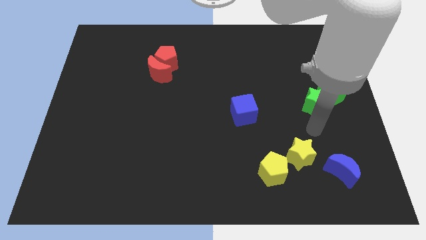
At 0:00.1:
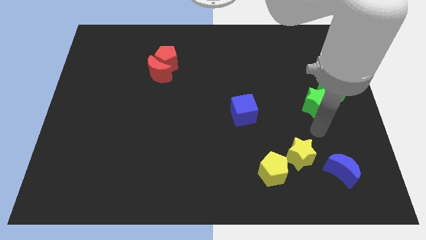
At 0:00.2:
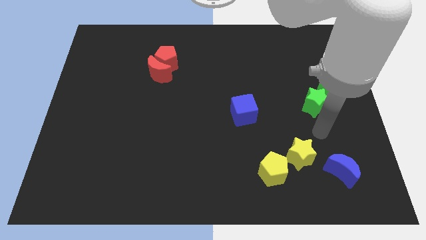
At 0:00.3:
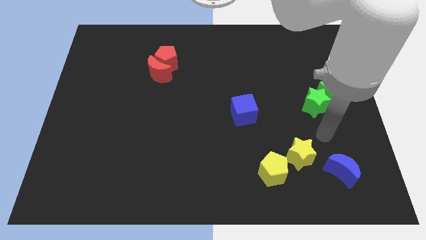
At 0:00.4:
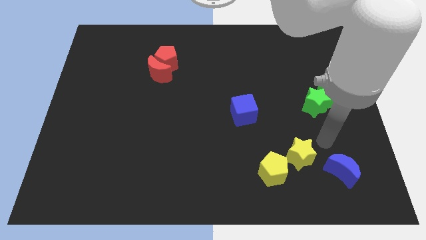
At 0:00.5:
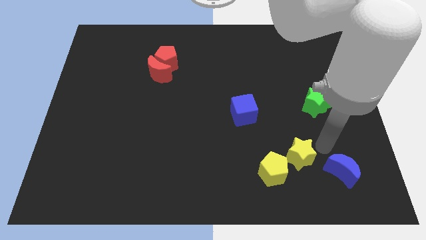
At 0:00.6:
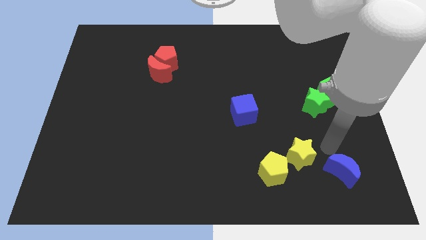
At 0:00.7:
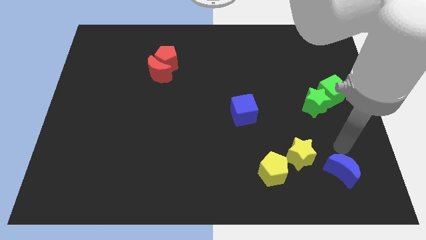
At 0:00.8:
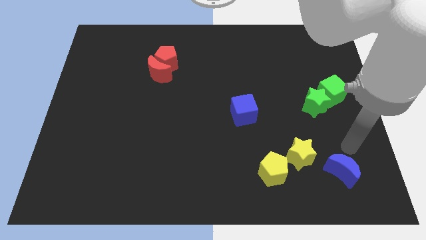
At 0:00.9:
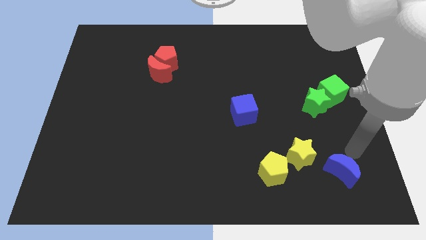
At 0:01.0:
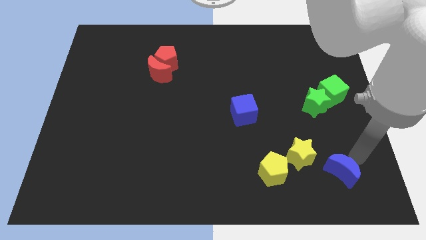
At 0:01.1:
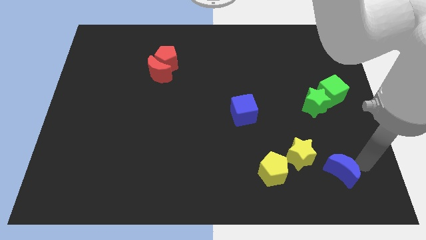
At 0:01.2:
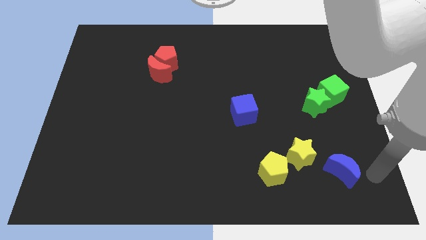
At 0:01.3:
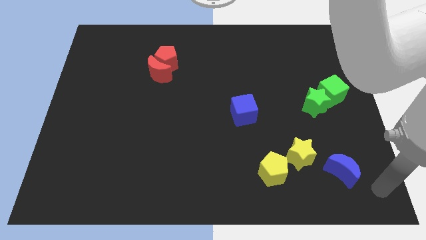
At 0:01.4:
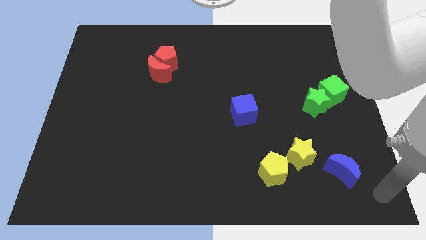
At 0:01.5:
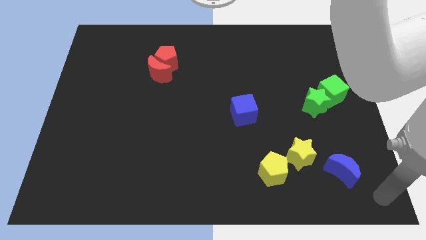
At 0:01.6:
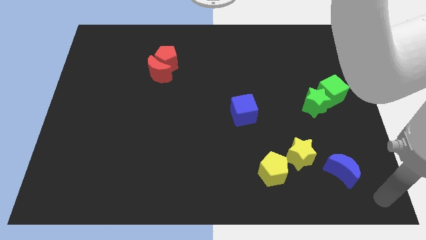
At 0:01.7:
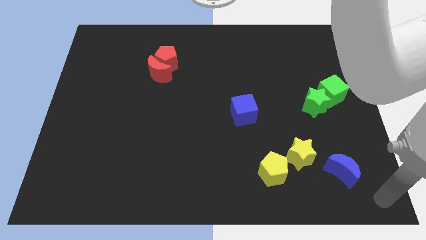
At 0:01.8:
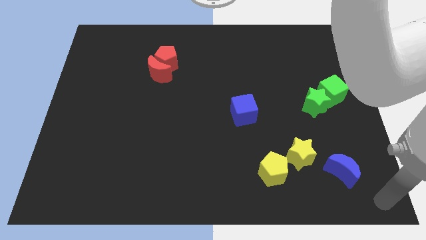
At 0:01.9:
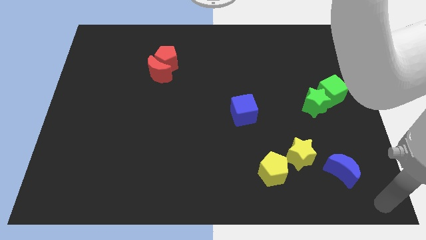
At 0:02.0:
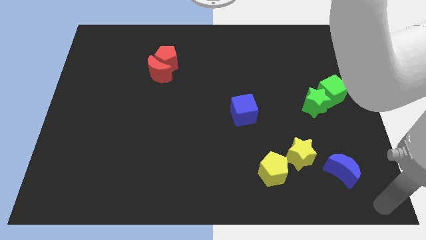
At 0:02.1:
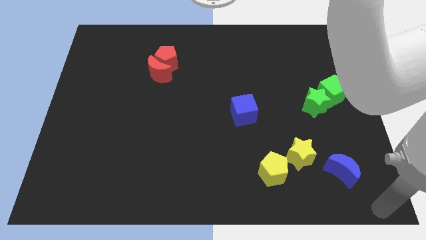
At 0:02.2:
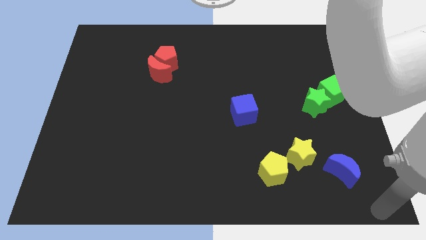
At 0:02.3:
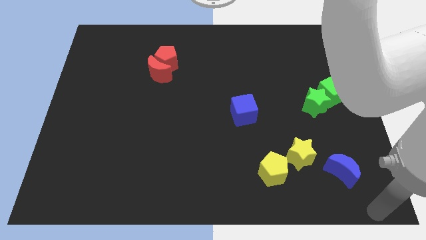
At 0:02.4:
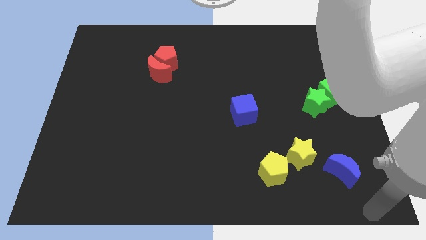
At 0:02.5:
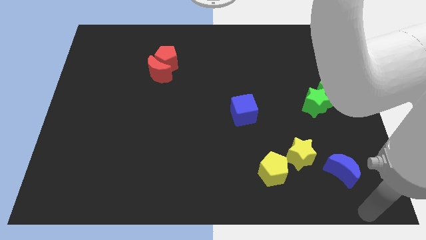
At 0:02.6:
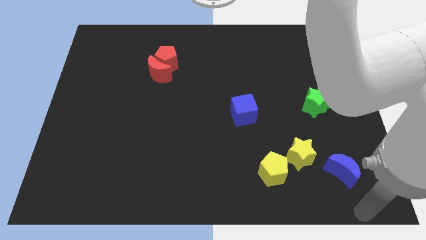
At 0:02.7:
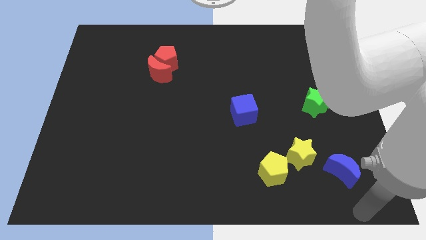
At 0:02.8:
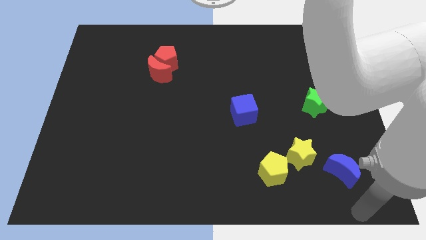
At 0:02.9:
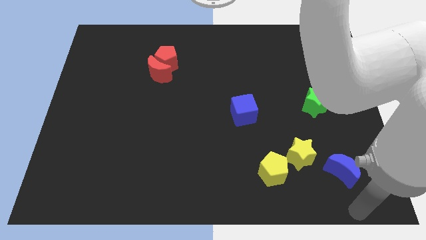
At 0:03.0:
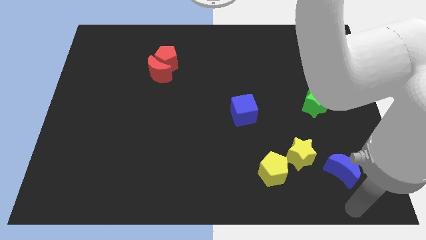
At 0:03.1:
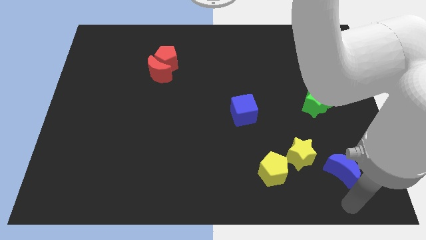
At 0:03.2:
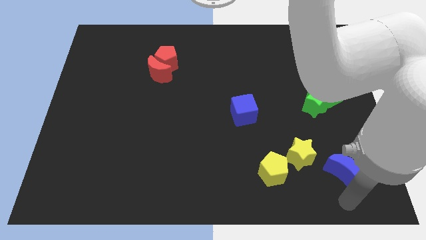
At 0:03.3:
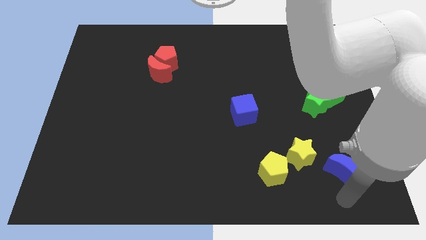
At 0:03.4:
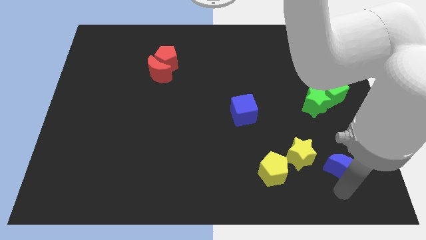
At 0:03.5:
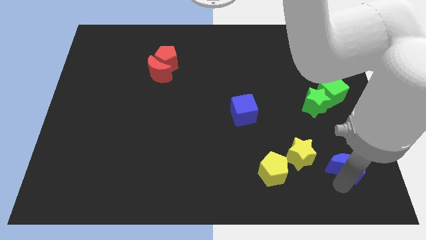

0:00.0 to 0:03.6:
move your arm towards the blue crescent

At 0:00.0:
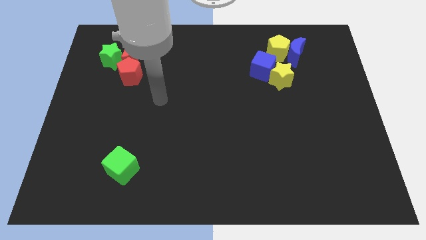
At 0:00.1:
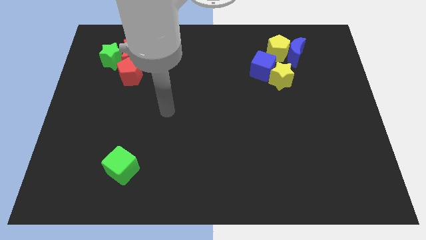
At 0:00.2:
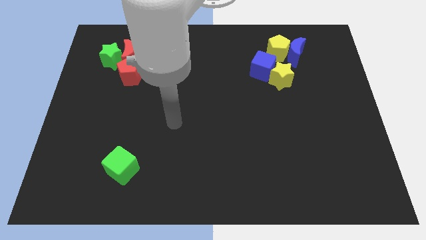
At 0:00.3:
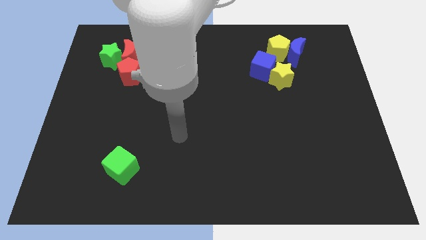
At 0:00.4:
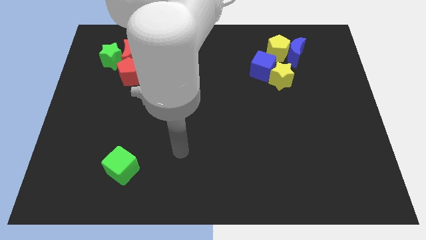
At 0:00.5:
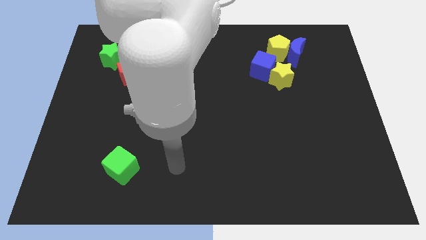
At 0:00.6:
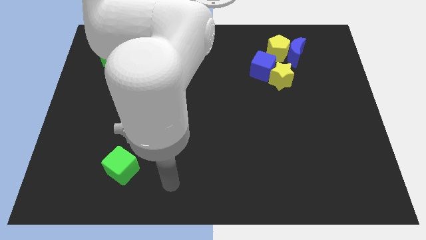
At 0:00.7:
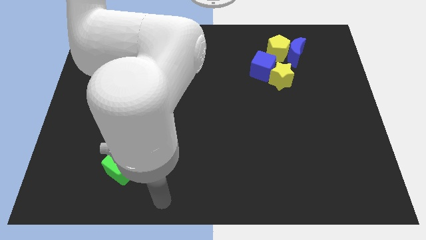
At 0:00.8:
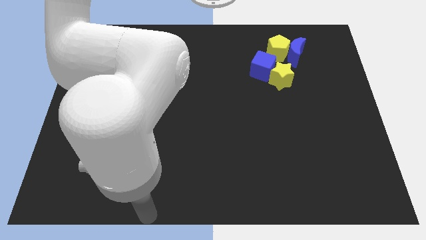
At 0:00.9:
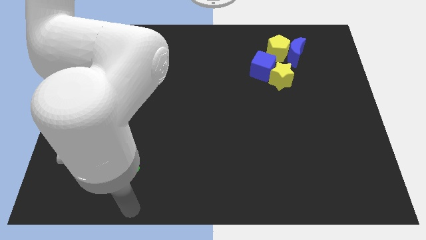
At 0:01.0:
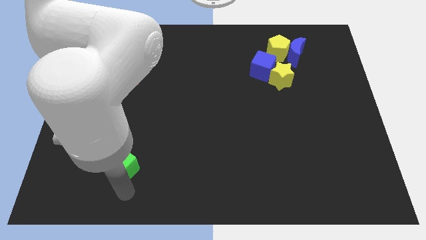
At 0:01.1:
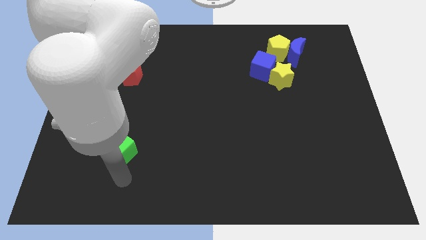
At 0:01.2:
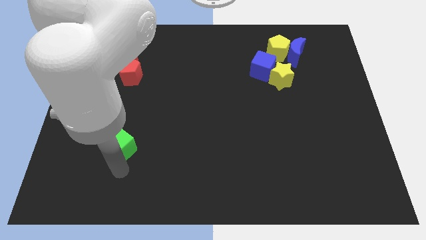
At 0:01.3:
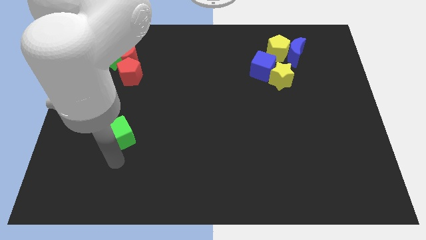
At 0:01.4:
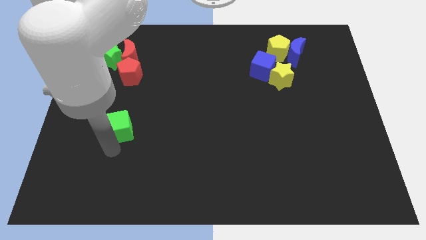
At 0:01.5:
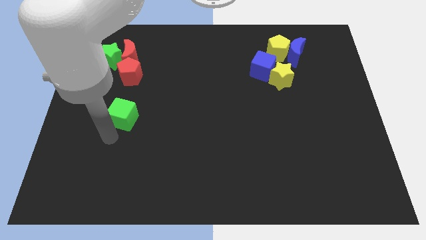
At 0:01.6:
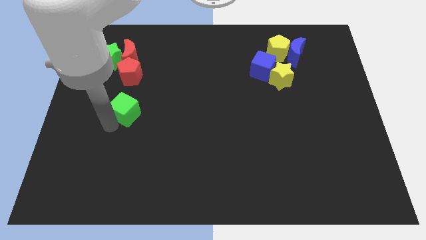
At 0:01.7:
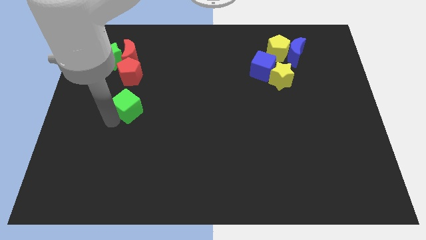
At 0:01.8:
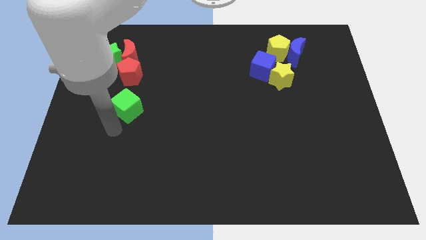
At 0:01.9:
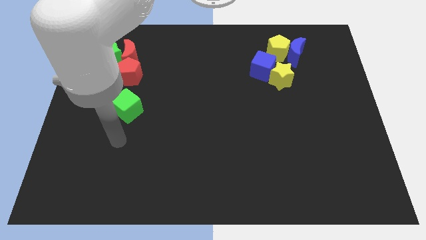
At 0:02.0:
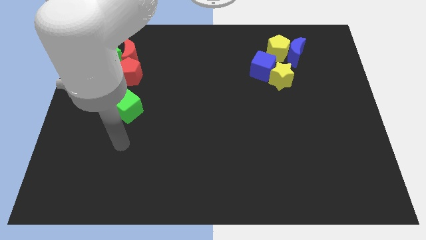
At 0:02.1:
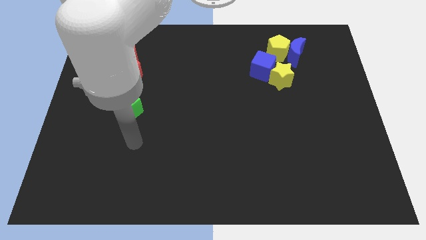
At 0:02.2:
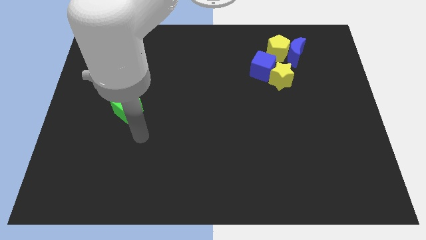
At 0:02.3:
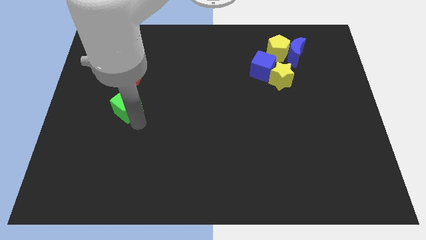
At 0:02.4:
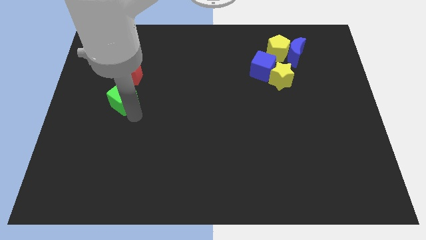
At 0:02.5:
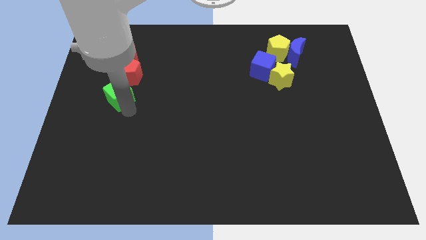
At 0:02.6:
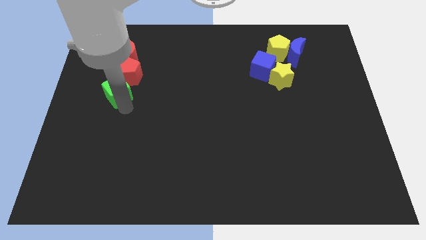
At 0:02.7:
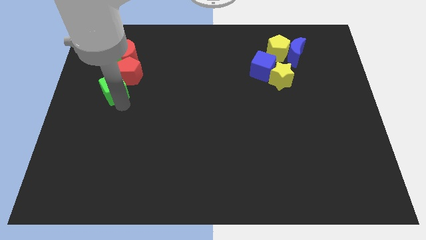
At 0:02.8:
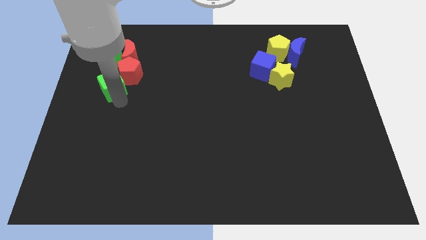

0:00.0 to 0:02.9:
place the green cube below the red pentagon

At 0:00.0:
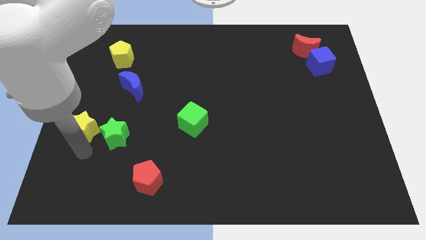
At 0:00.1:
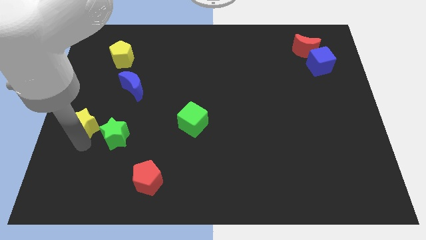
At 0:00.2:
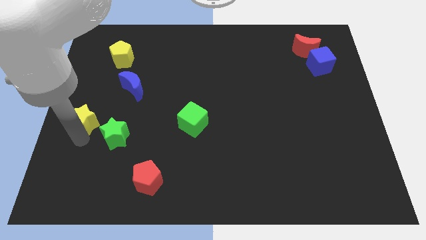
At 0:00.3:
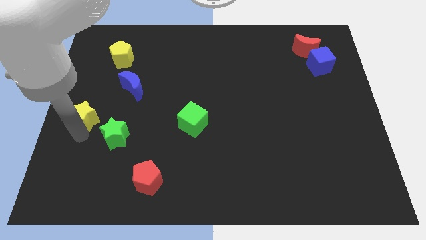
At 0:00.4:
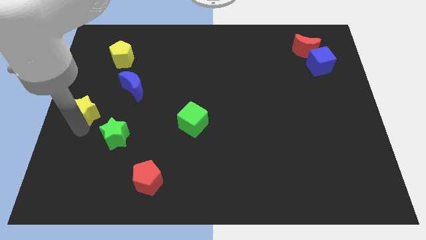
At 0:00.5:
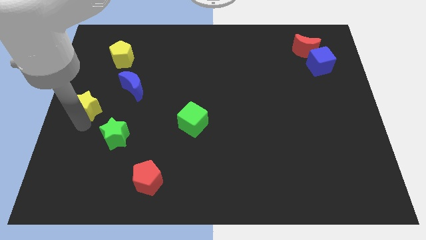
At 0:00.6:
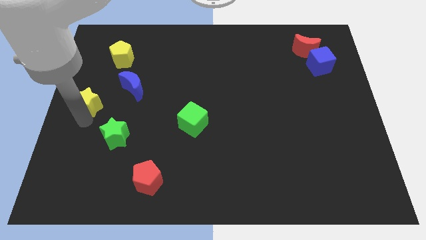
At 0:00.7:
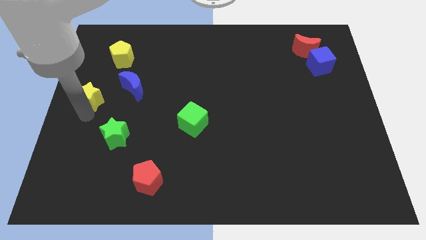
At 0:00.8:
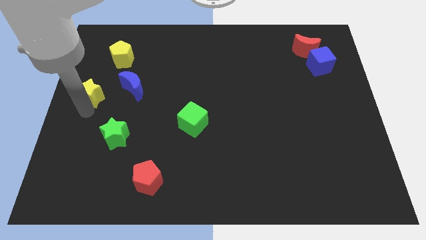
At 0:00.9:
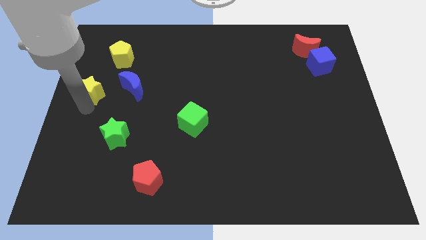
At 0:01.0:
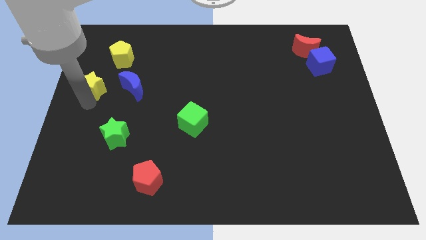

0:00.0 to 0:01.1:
push yellow star upwards

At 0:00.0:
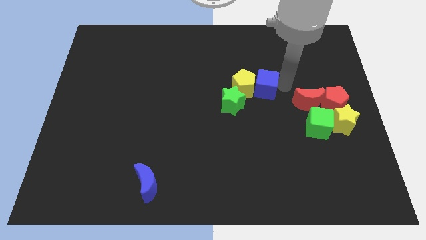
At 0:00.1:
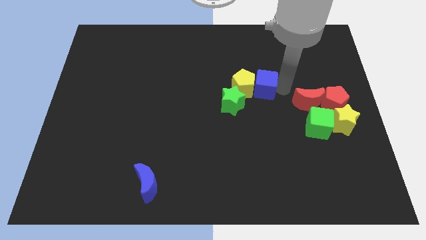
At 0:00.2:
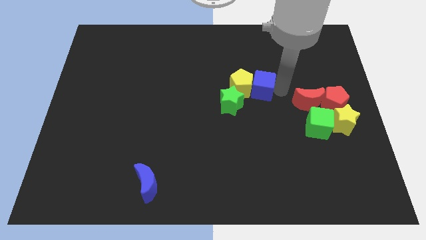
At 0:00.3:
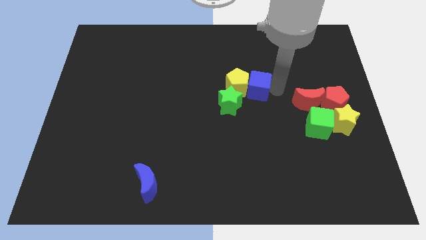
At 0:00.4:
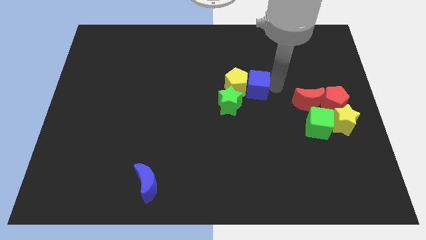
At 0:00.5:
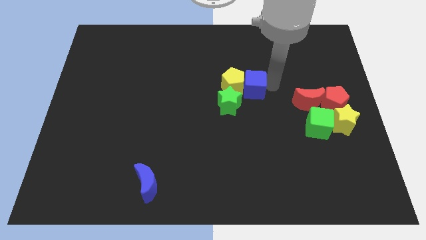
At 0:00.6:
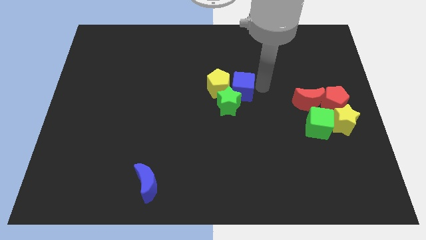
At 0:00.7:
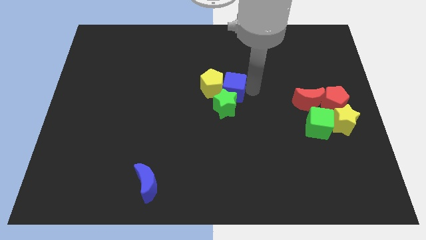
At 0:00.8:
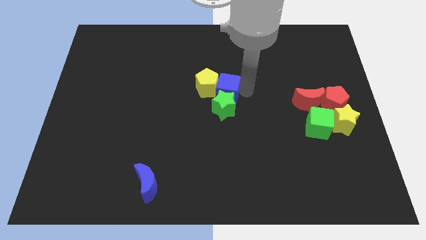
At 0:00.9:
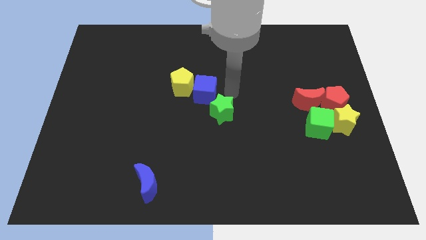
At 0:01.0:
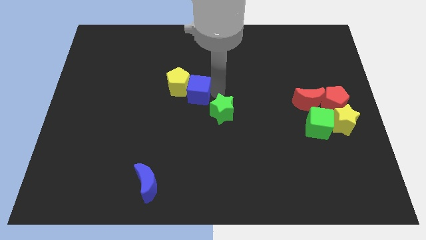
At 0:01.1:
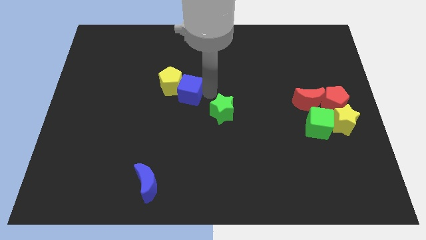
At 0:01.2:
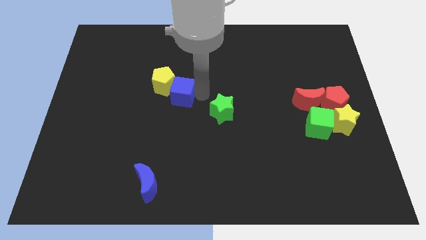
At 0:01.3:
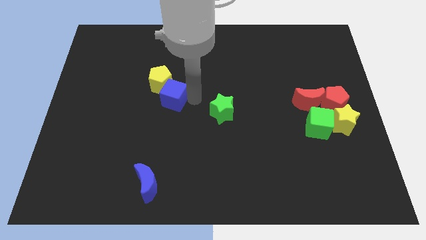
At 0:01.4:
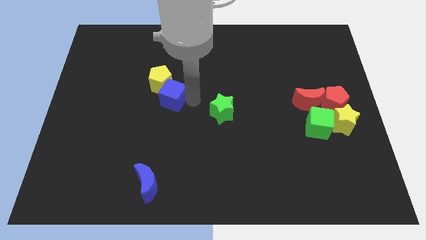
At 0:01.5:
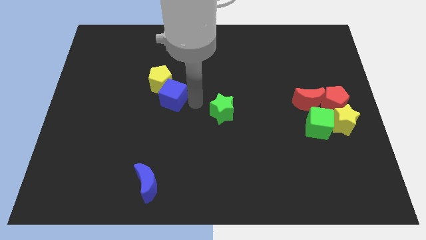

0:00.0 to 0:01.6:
push the blue cube near to the center of the board
